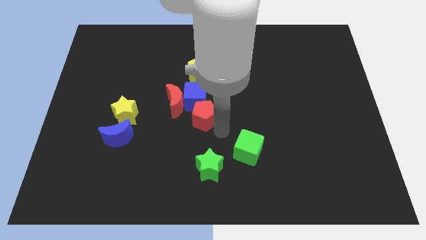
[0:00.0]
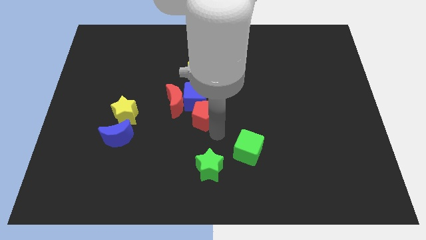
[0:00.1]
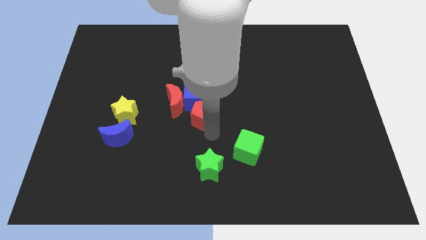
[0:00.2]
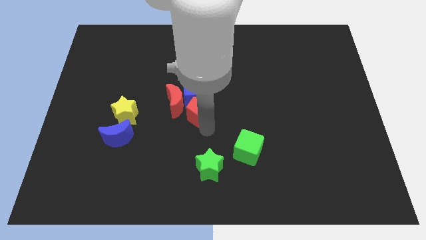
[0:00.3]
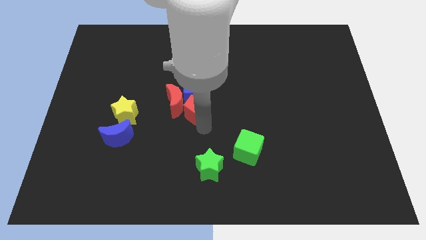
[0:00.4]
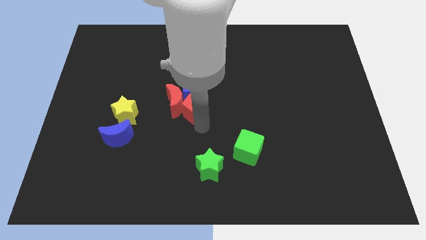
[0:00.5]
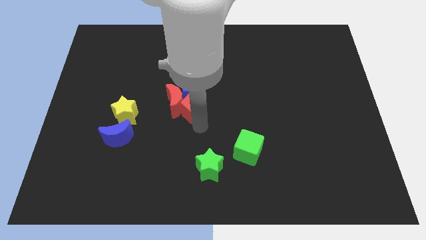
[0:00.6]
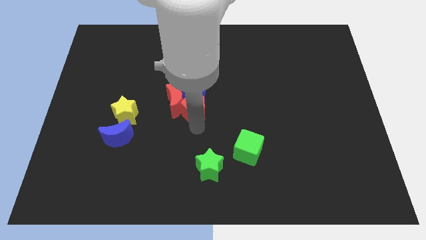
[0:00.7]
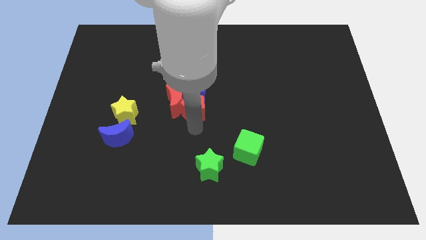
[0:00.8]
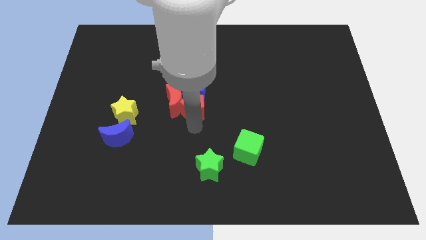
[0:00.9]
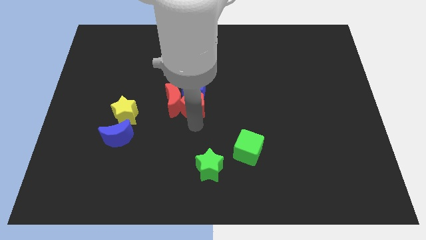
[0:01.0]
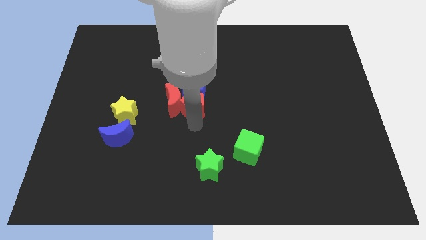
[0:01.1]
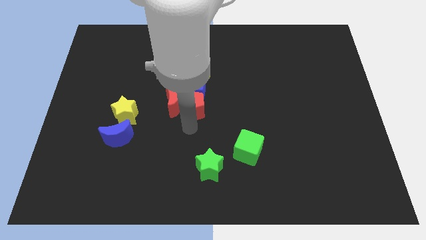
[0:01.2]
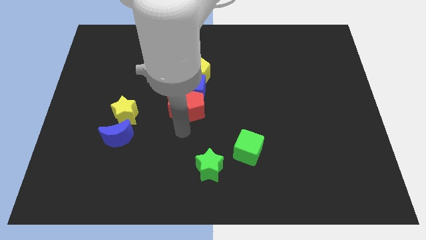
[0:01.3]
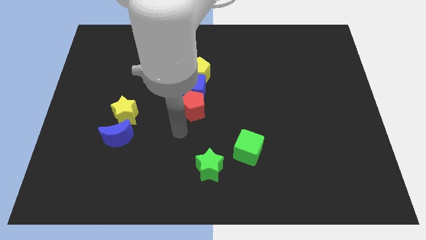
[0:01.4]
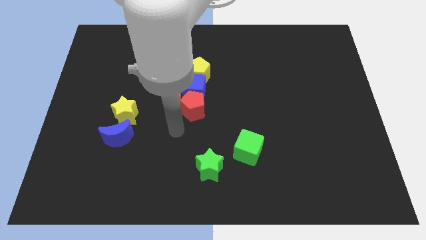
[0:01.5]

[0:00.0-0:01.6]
move red pentagon into the blue block

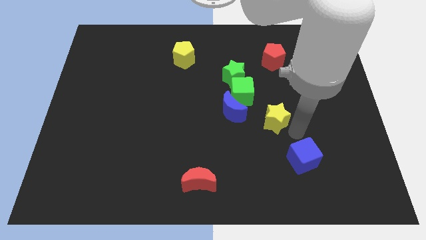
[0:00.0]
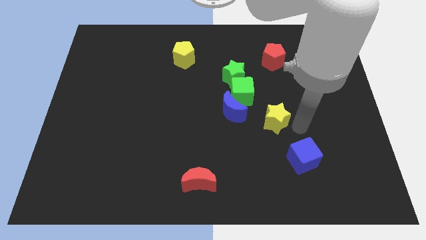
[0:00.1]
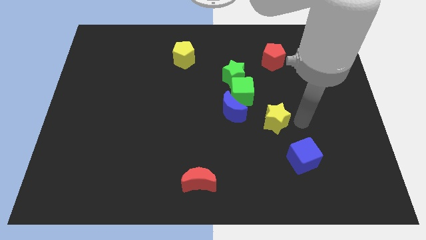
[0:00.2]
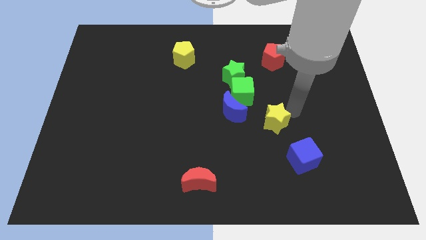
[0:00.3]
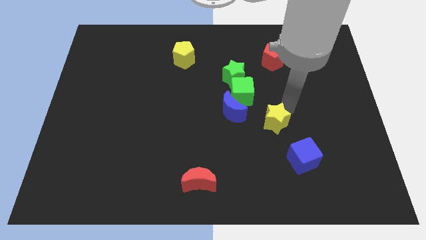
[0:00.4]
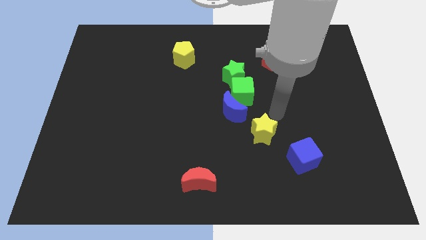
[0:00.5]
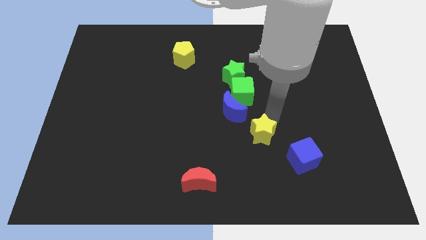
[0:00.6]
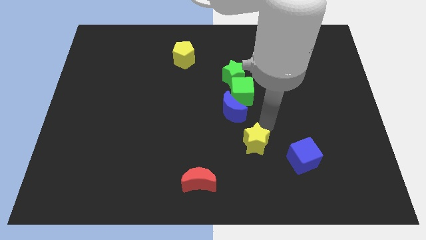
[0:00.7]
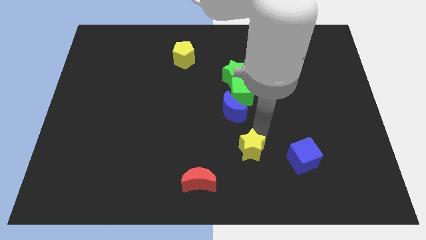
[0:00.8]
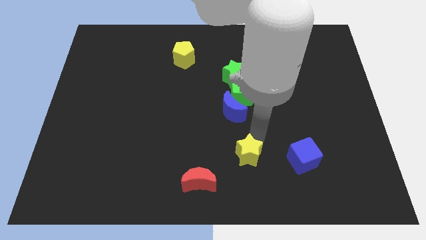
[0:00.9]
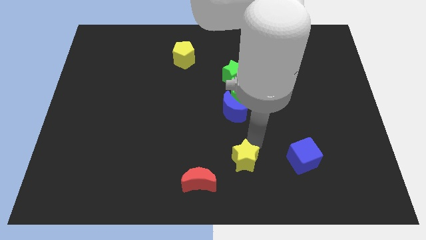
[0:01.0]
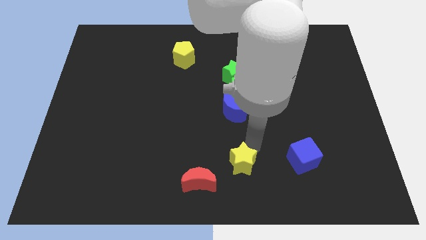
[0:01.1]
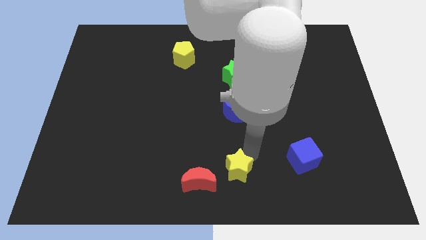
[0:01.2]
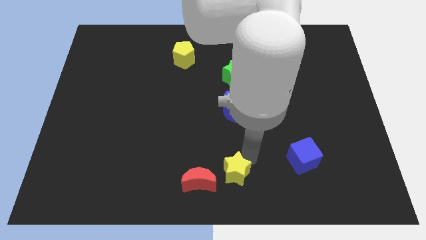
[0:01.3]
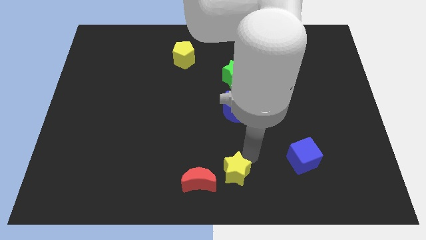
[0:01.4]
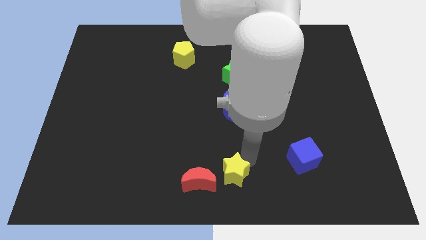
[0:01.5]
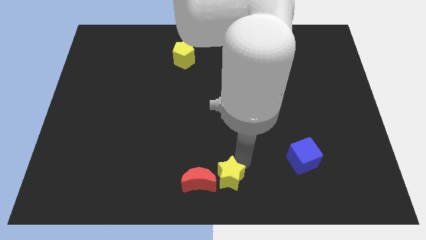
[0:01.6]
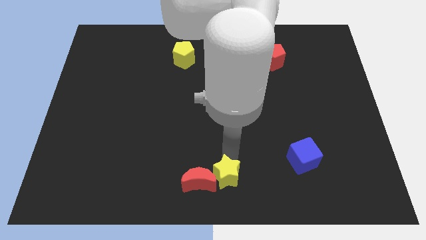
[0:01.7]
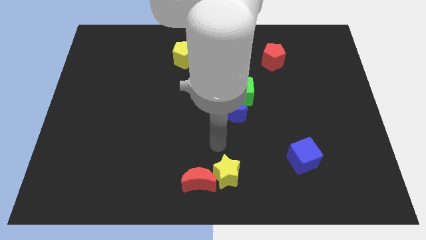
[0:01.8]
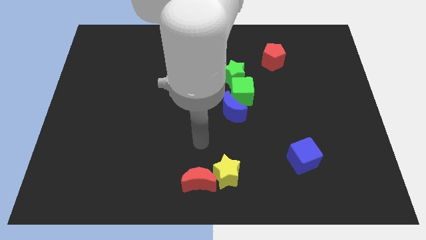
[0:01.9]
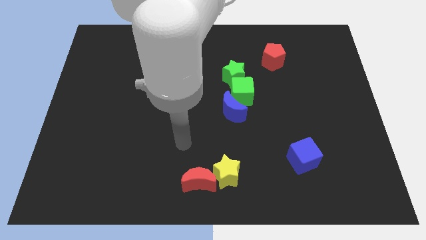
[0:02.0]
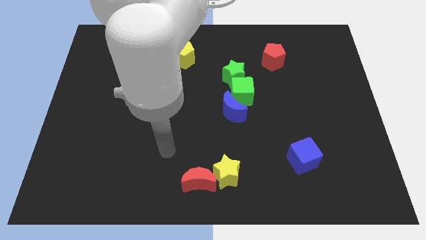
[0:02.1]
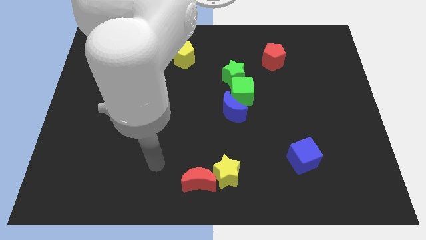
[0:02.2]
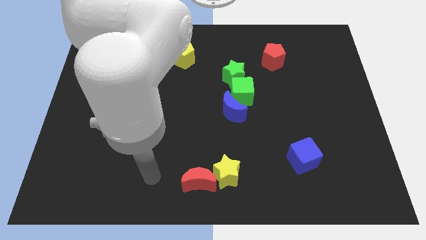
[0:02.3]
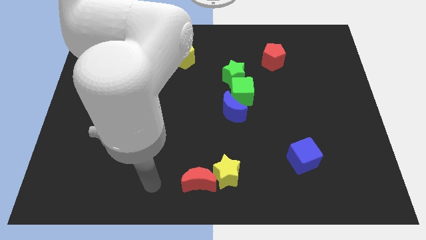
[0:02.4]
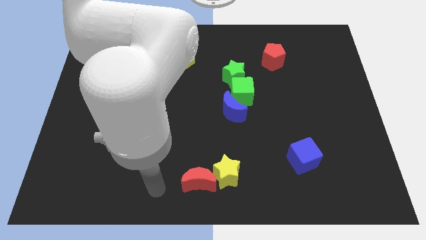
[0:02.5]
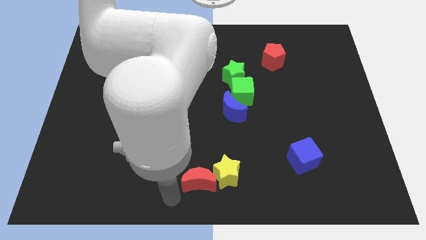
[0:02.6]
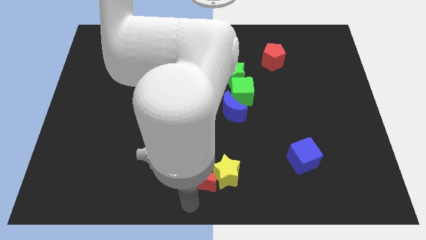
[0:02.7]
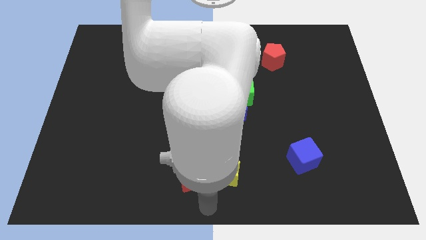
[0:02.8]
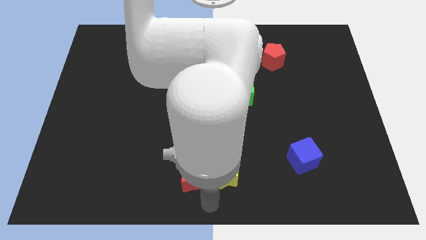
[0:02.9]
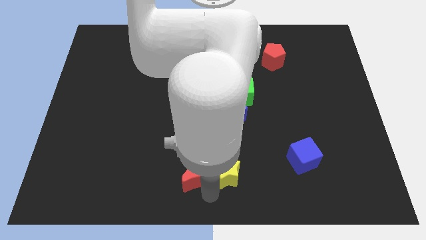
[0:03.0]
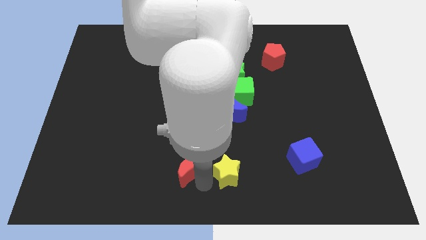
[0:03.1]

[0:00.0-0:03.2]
place green star right to red crescent

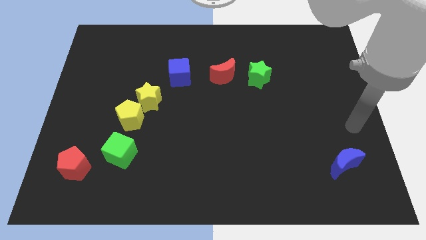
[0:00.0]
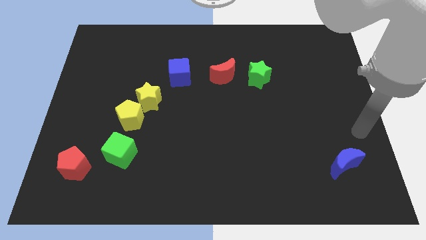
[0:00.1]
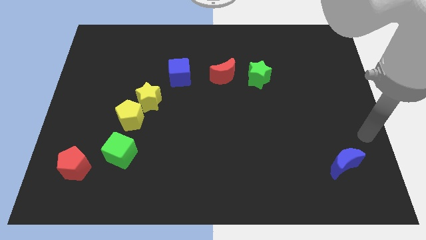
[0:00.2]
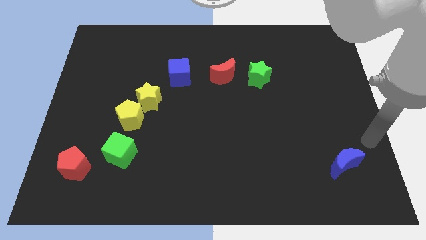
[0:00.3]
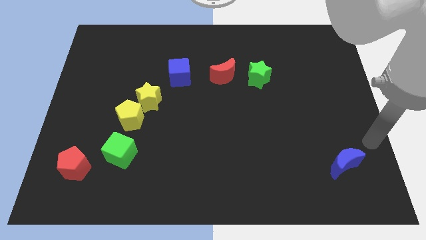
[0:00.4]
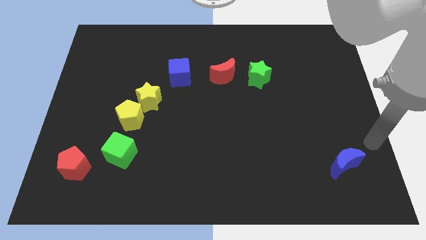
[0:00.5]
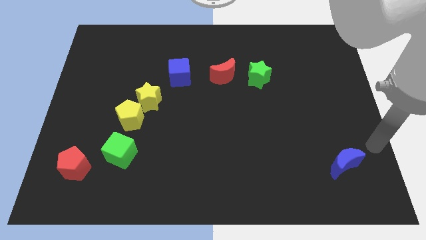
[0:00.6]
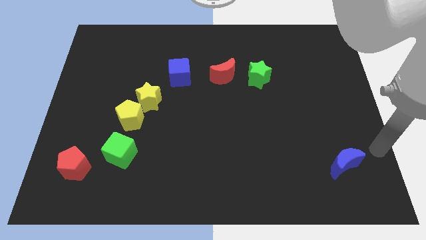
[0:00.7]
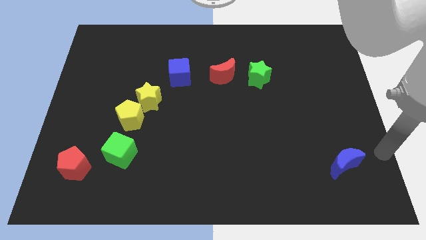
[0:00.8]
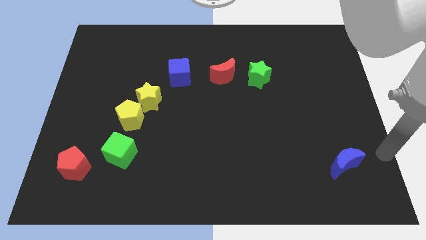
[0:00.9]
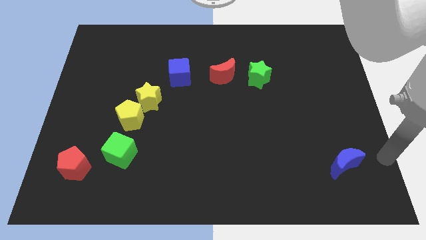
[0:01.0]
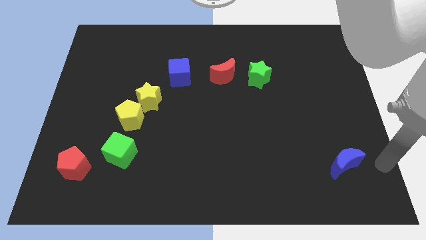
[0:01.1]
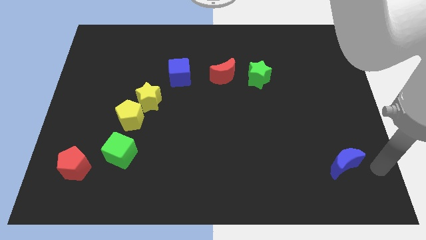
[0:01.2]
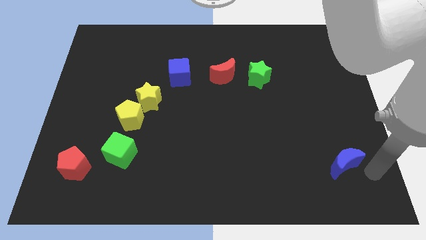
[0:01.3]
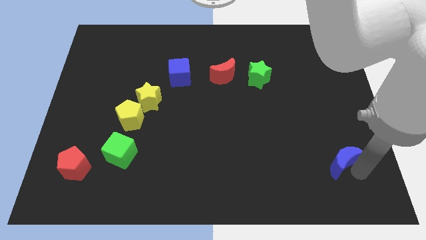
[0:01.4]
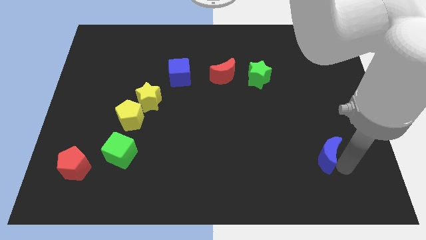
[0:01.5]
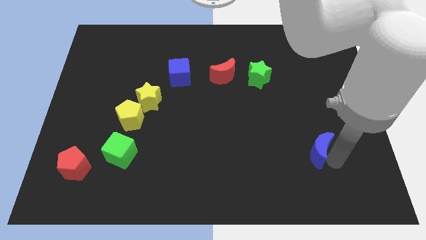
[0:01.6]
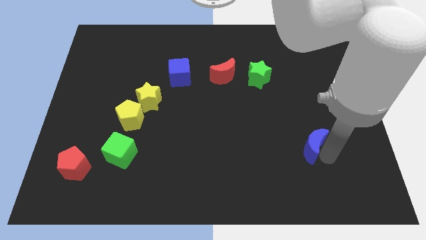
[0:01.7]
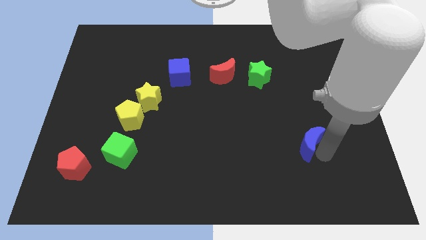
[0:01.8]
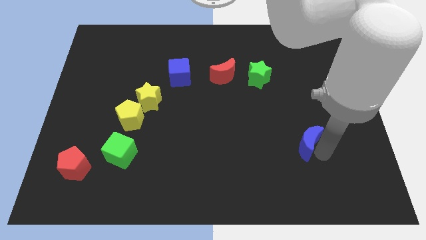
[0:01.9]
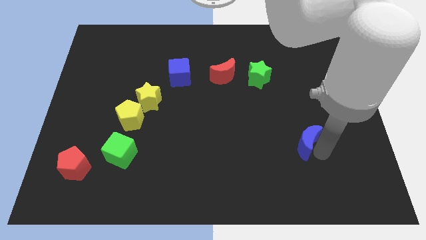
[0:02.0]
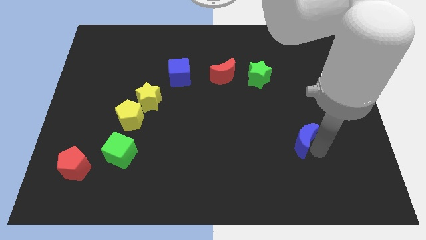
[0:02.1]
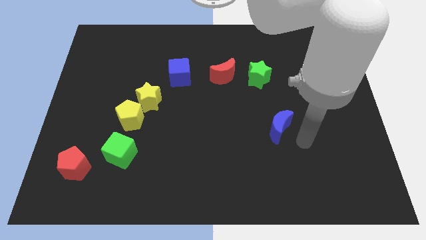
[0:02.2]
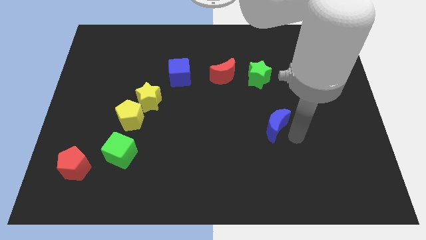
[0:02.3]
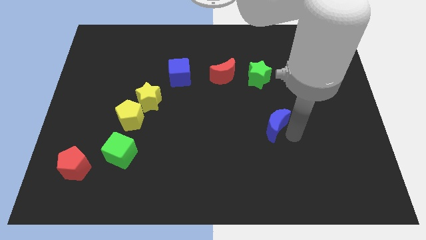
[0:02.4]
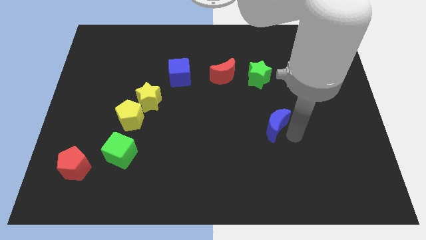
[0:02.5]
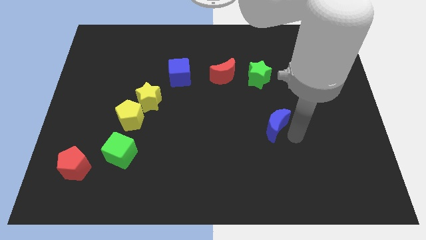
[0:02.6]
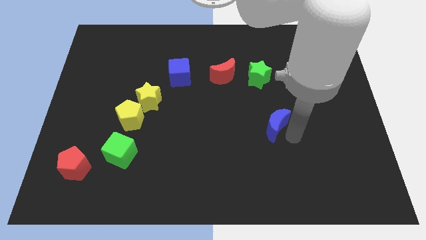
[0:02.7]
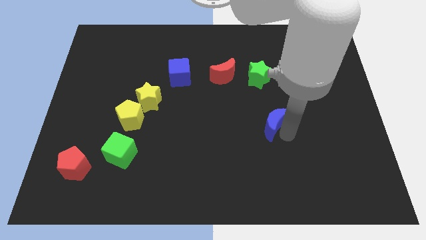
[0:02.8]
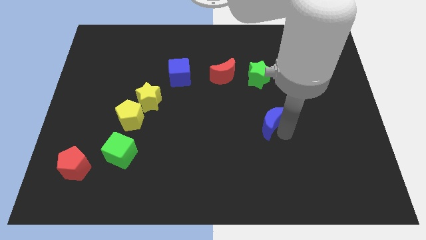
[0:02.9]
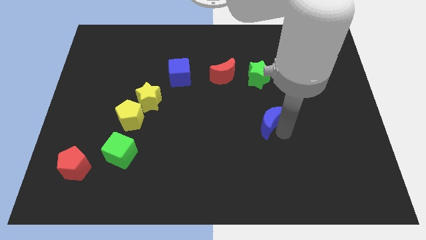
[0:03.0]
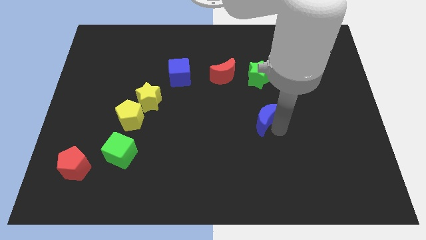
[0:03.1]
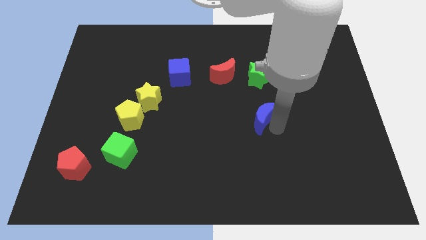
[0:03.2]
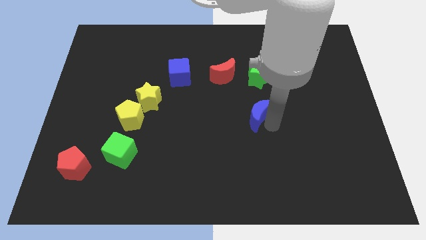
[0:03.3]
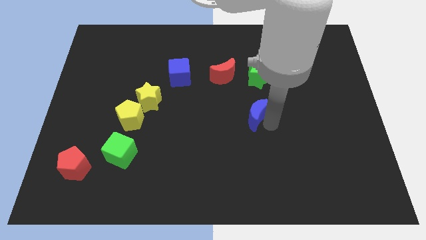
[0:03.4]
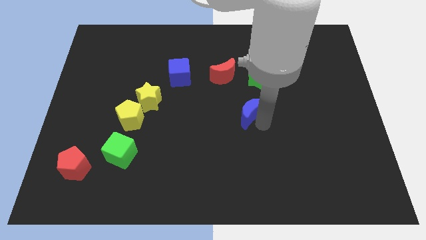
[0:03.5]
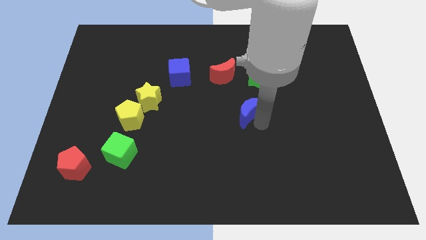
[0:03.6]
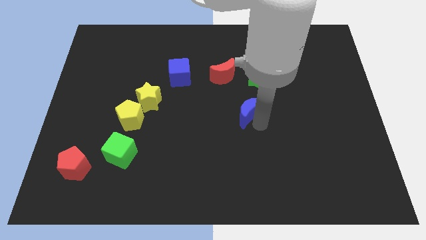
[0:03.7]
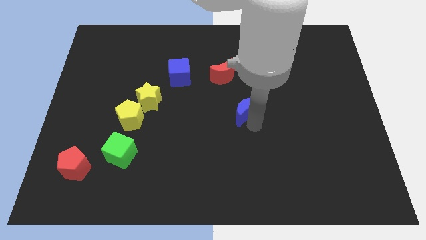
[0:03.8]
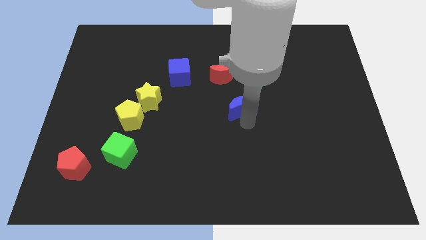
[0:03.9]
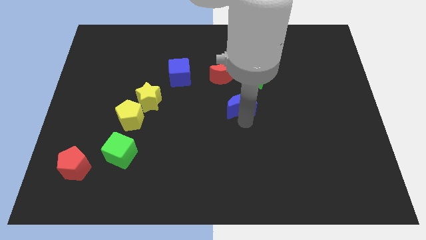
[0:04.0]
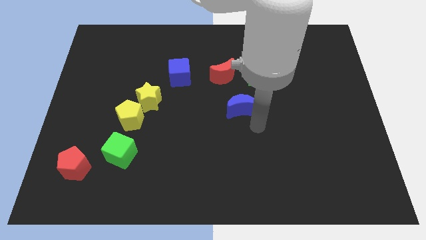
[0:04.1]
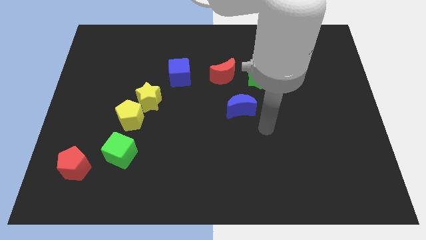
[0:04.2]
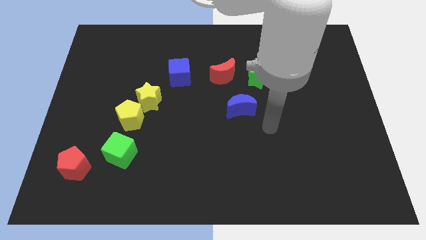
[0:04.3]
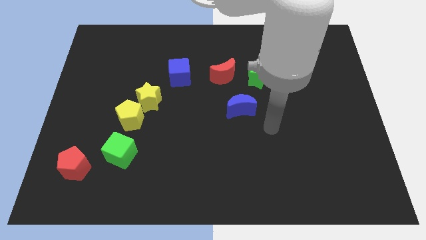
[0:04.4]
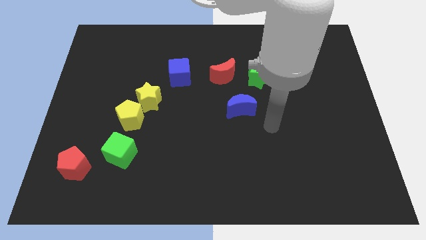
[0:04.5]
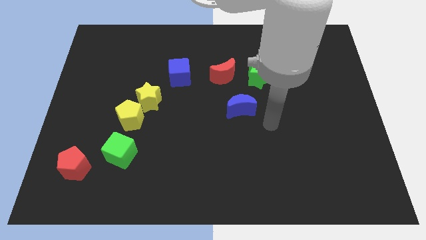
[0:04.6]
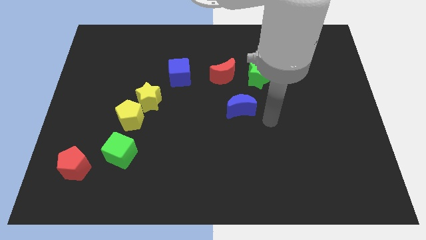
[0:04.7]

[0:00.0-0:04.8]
place the blue moon right to the yellow star
